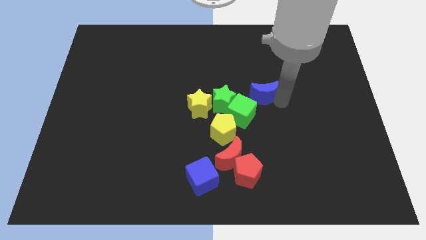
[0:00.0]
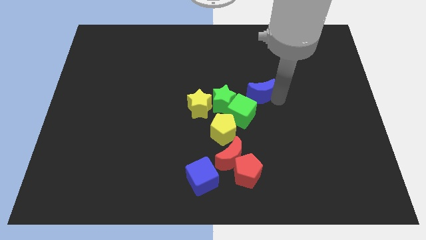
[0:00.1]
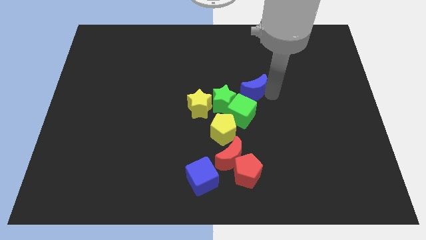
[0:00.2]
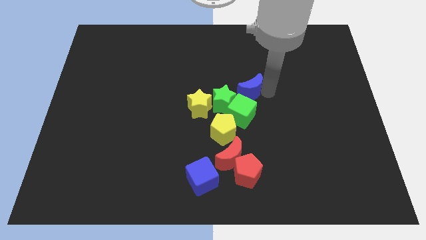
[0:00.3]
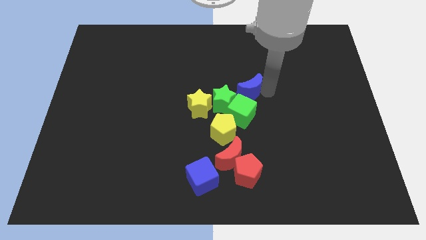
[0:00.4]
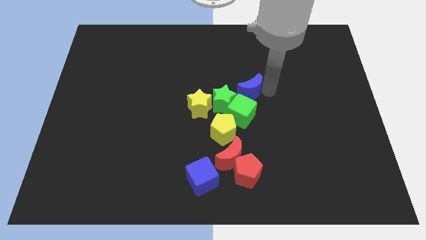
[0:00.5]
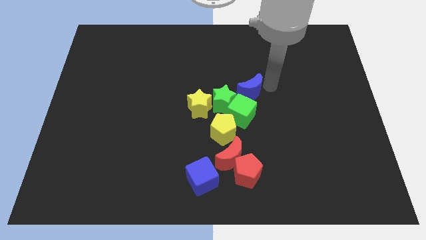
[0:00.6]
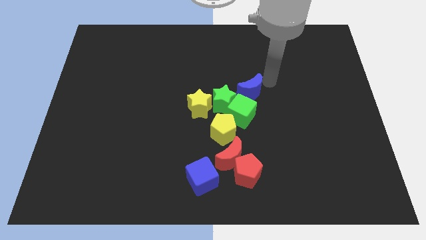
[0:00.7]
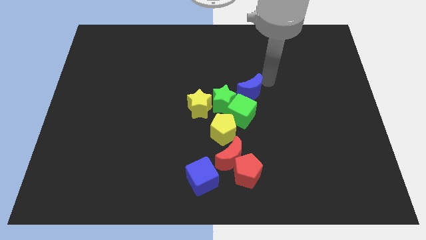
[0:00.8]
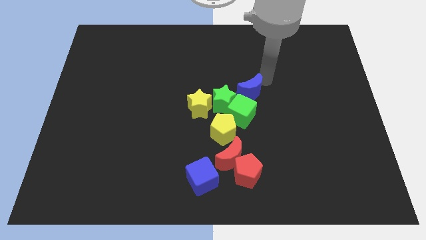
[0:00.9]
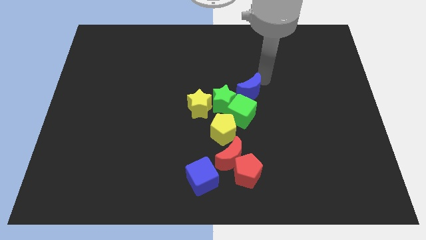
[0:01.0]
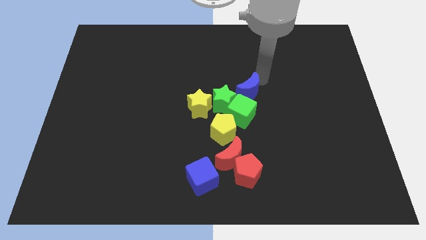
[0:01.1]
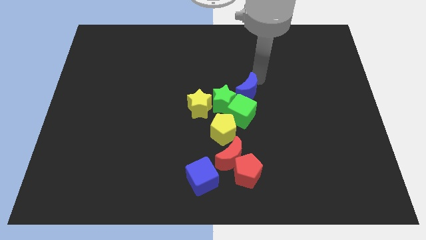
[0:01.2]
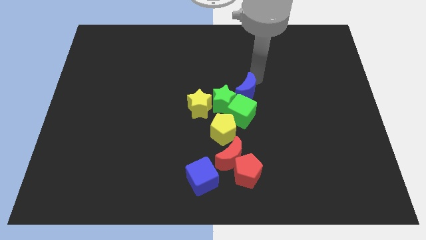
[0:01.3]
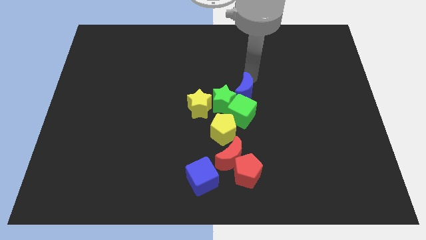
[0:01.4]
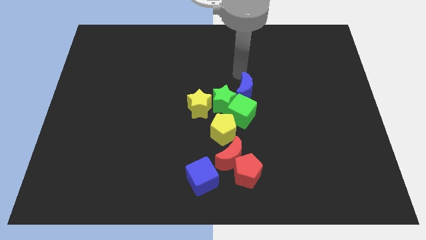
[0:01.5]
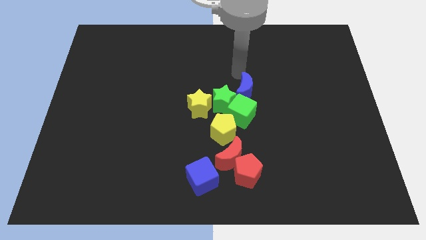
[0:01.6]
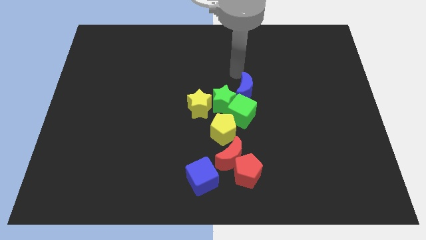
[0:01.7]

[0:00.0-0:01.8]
put the blue moon above the green cube

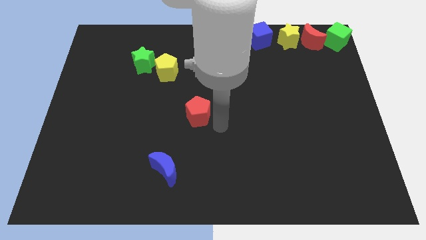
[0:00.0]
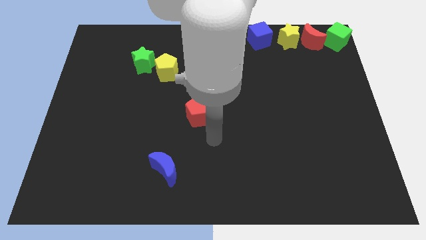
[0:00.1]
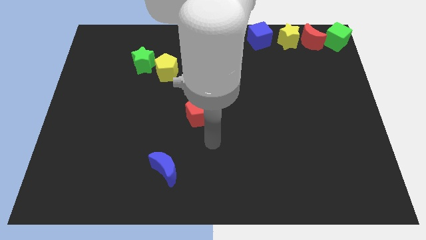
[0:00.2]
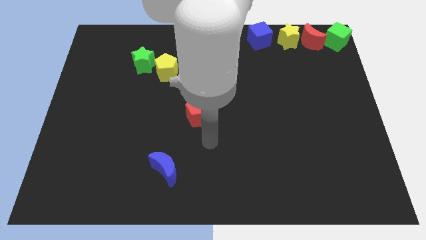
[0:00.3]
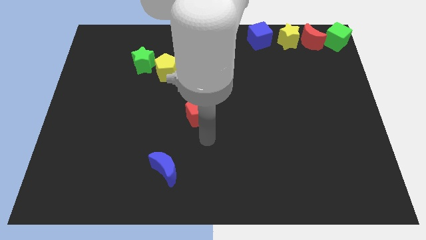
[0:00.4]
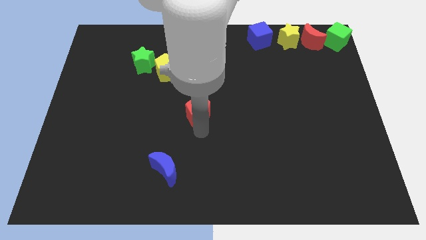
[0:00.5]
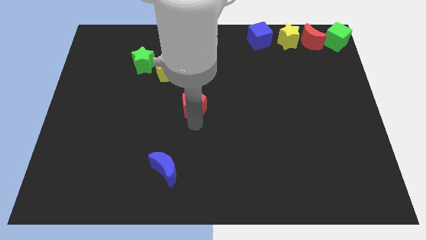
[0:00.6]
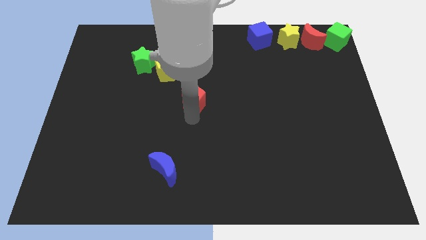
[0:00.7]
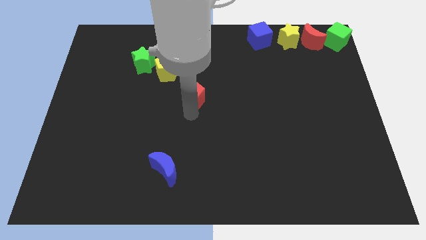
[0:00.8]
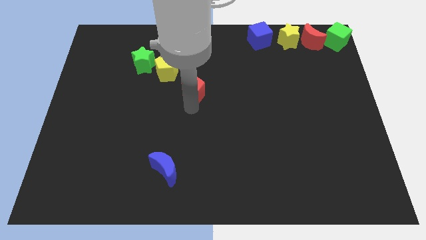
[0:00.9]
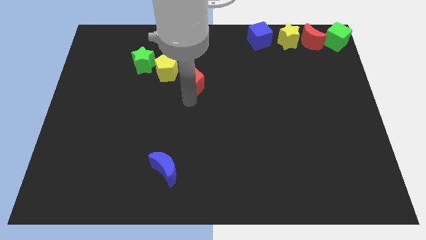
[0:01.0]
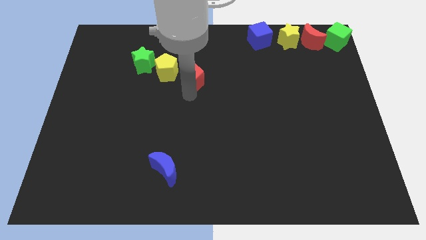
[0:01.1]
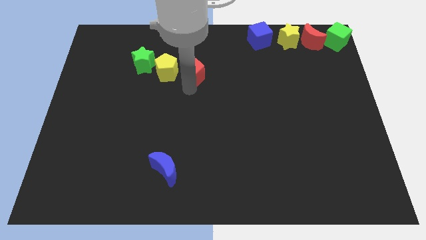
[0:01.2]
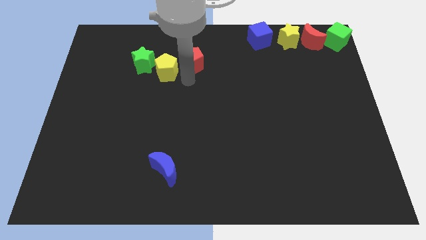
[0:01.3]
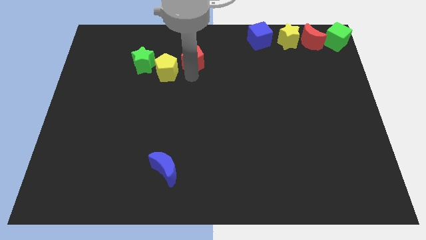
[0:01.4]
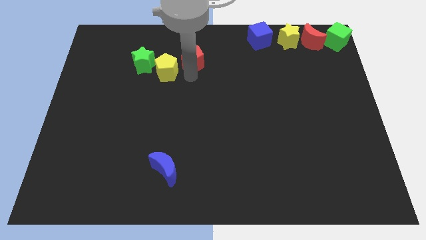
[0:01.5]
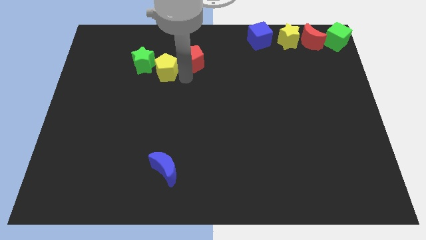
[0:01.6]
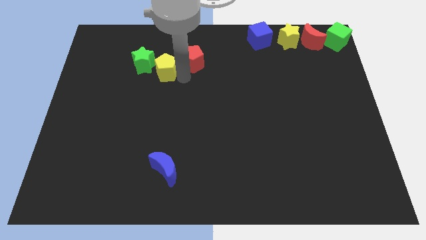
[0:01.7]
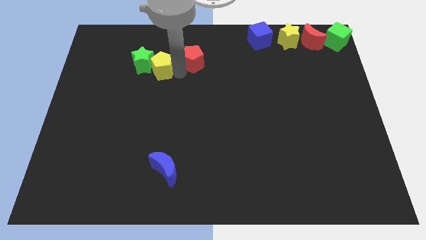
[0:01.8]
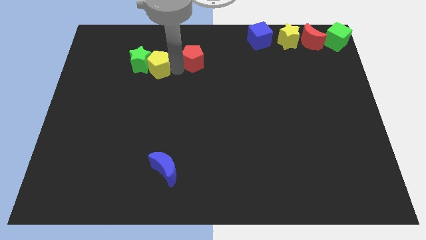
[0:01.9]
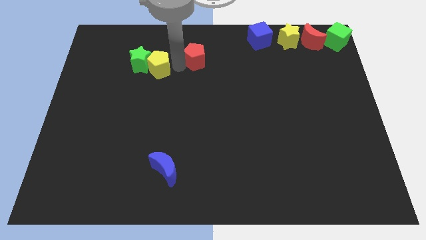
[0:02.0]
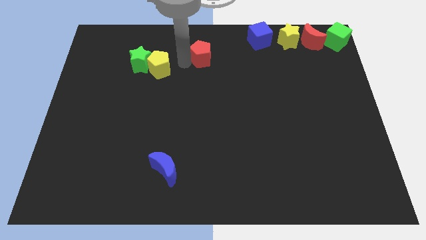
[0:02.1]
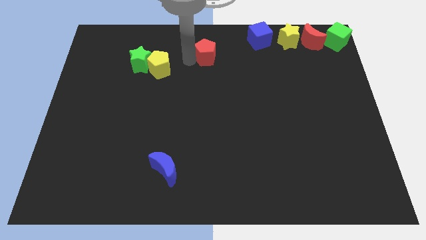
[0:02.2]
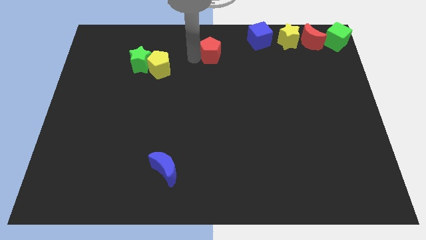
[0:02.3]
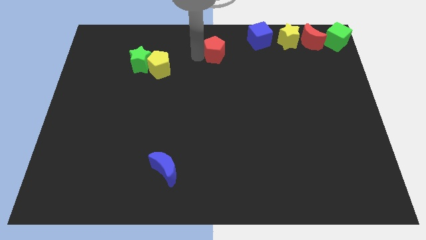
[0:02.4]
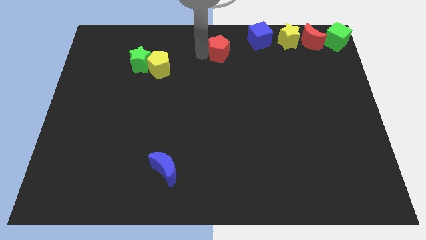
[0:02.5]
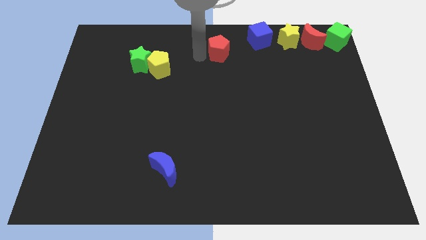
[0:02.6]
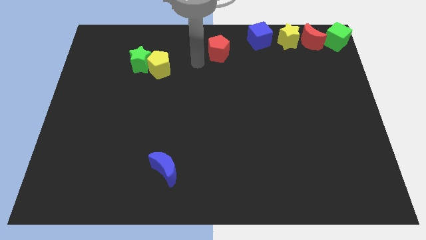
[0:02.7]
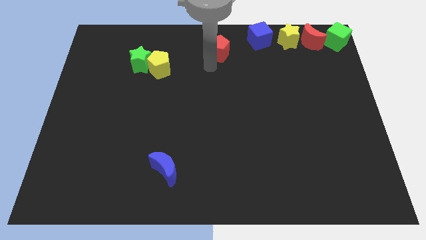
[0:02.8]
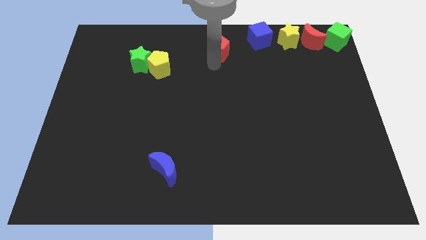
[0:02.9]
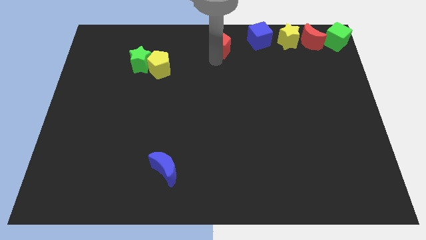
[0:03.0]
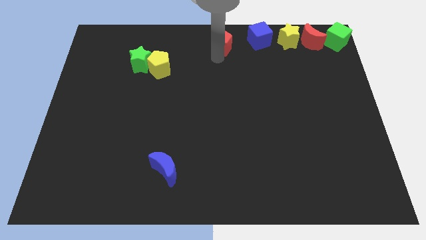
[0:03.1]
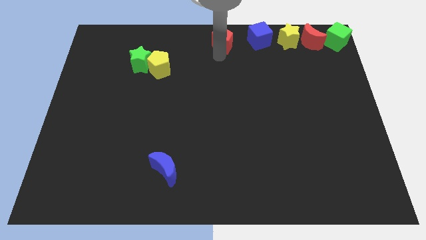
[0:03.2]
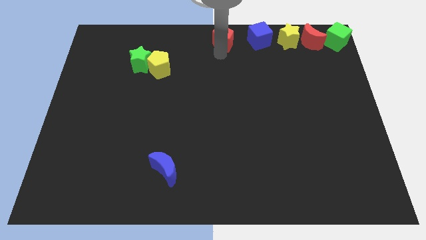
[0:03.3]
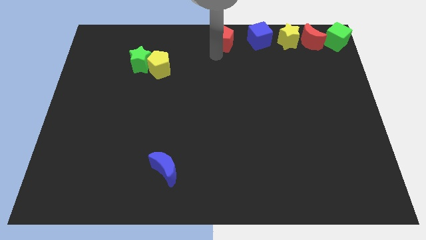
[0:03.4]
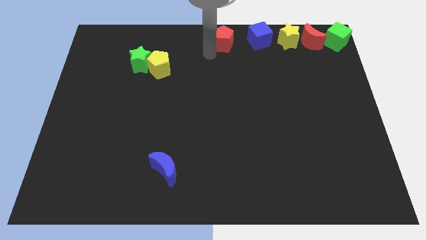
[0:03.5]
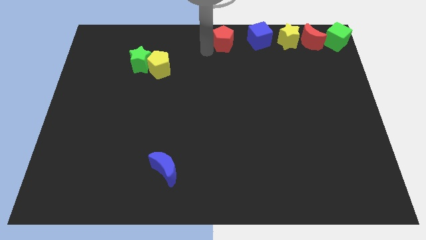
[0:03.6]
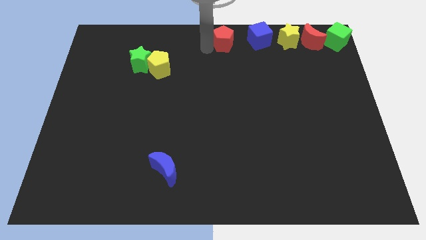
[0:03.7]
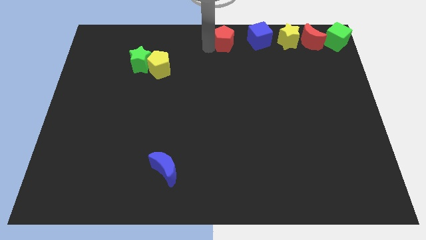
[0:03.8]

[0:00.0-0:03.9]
drag the red pentagon from center to top center

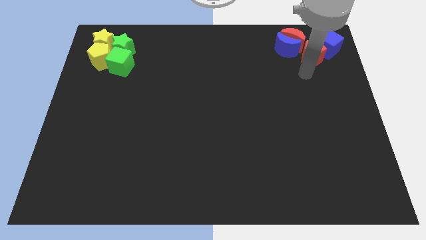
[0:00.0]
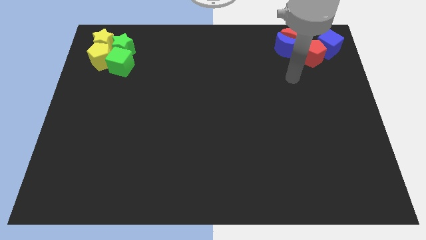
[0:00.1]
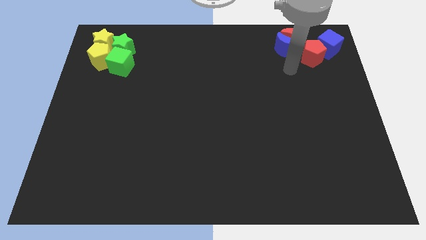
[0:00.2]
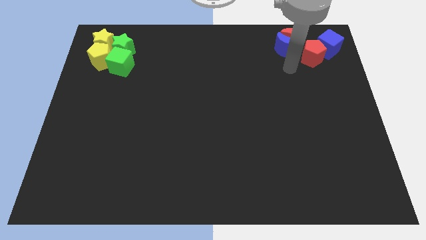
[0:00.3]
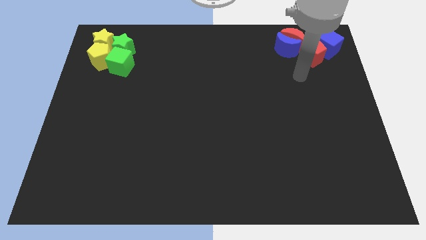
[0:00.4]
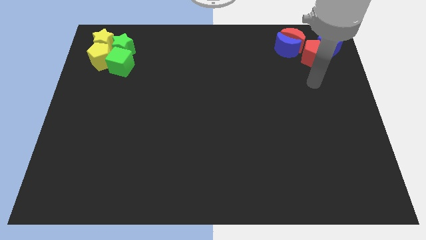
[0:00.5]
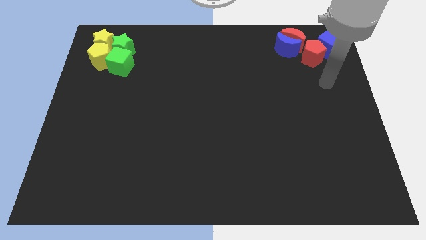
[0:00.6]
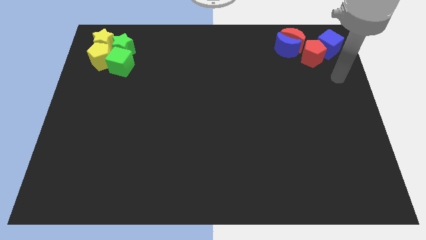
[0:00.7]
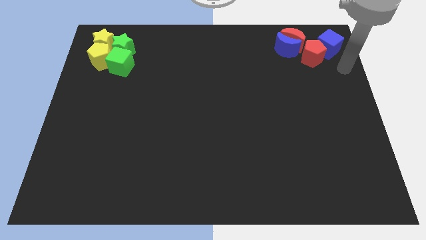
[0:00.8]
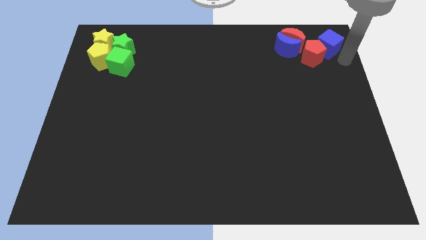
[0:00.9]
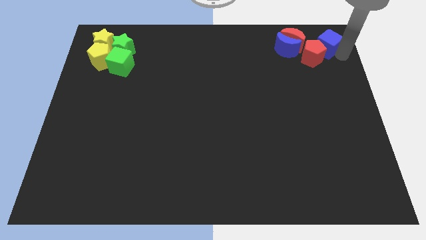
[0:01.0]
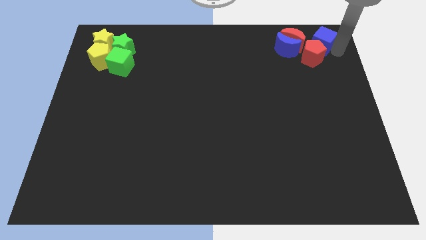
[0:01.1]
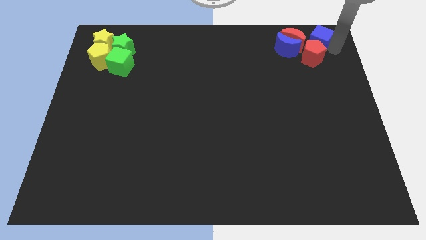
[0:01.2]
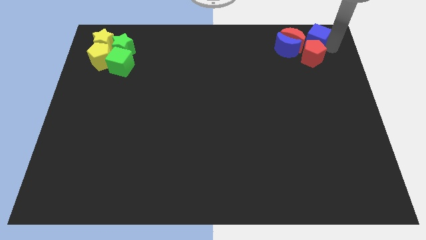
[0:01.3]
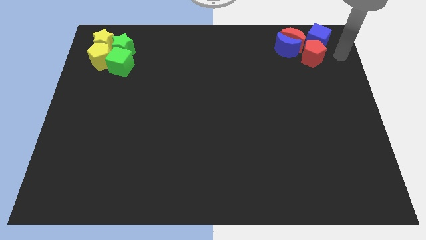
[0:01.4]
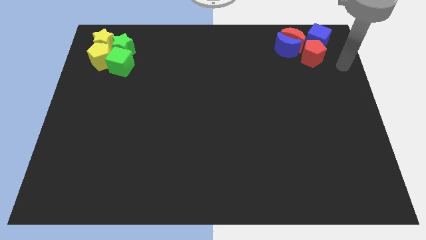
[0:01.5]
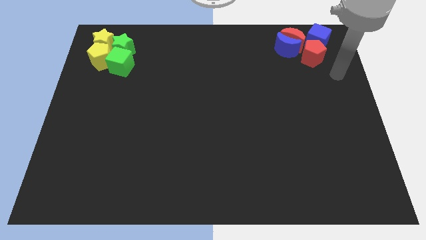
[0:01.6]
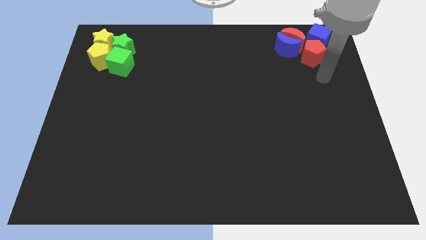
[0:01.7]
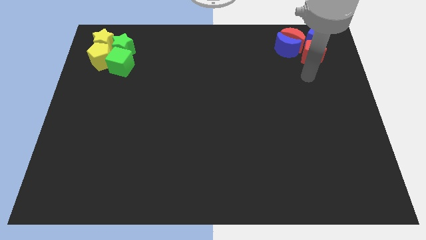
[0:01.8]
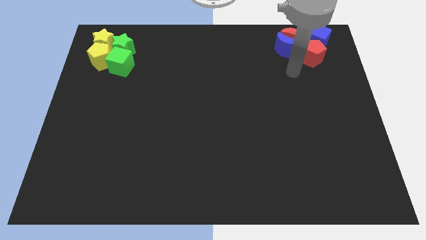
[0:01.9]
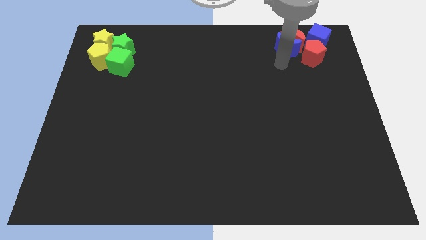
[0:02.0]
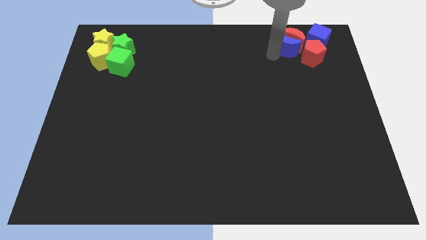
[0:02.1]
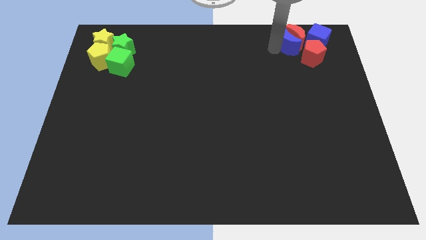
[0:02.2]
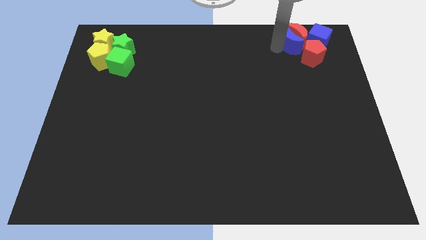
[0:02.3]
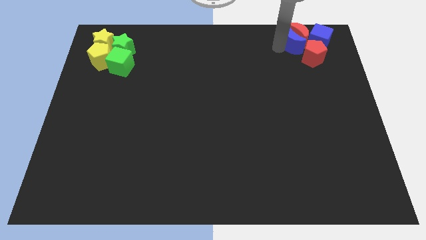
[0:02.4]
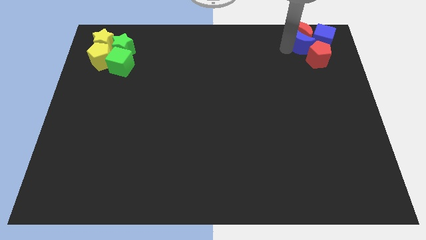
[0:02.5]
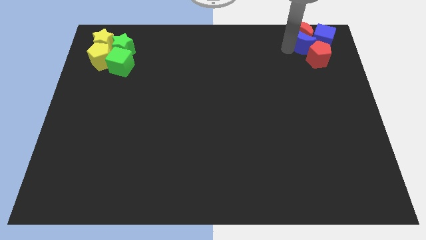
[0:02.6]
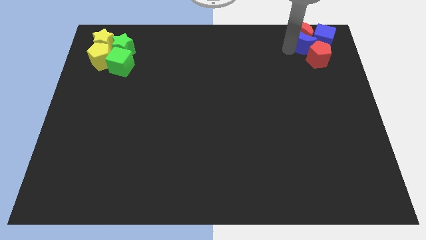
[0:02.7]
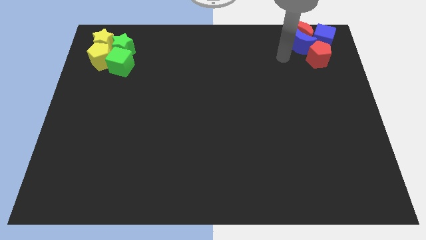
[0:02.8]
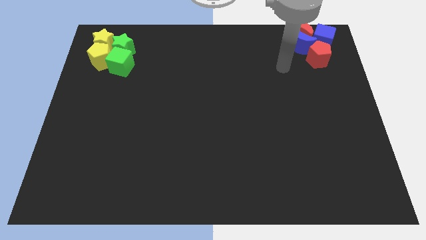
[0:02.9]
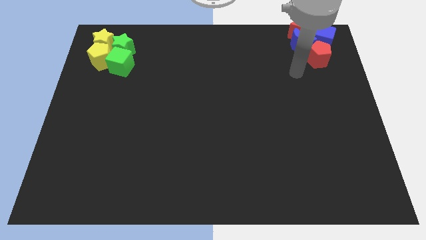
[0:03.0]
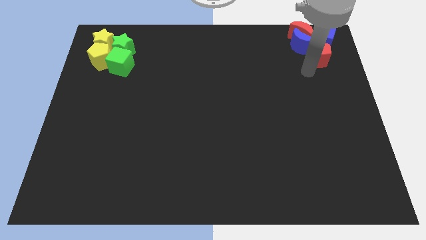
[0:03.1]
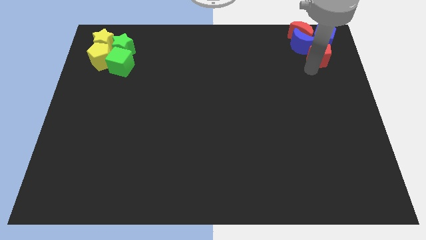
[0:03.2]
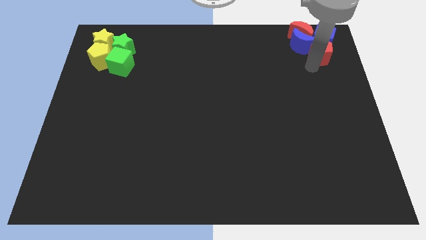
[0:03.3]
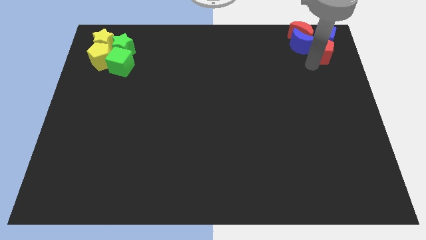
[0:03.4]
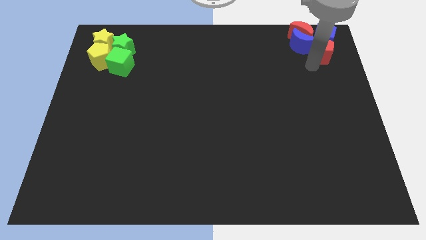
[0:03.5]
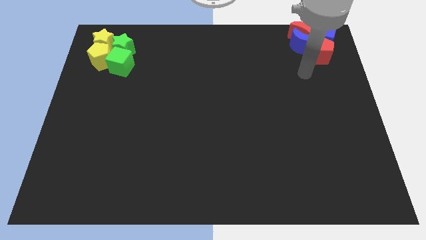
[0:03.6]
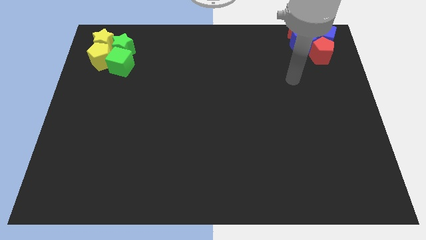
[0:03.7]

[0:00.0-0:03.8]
adjust the red and blue blocks at the top right of the board
